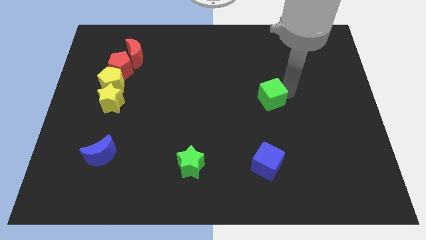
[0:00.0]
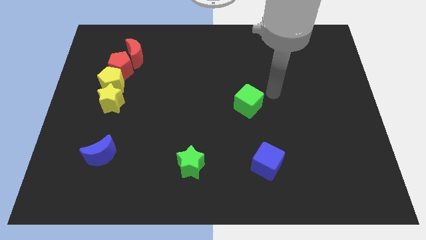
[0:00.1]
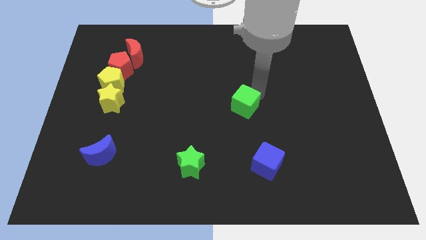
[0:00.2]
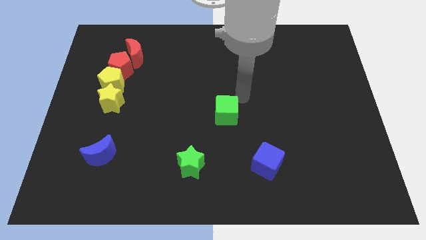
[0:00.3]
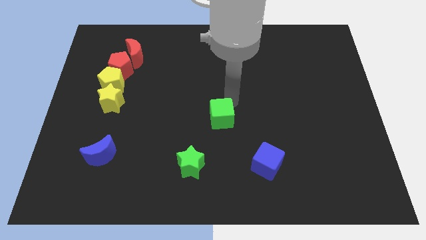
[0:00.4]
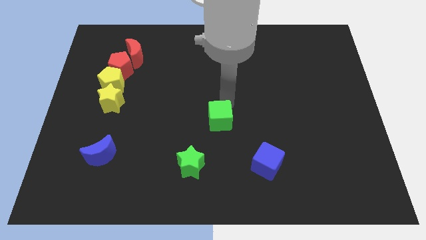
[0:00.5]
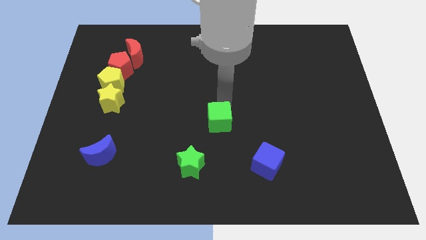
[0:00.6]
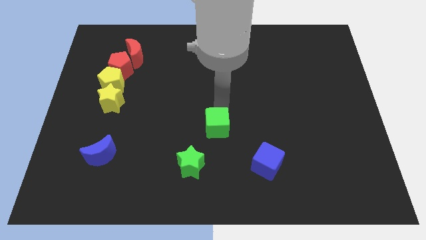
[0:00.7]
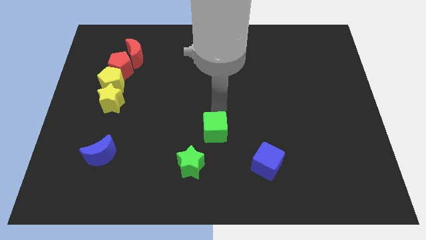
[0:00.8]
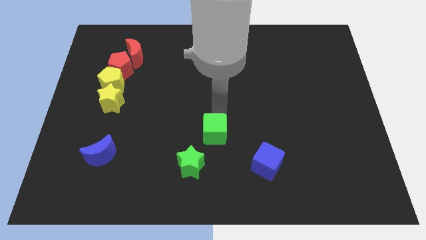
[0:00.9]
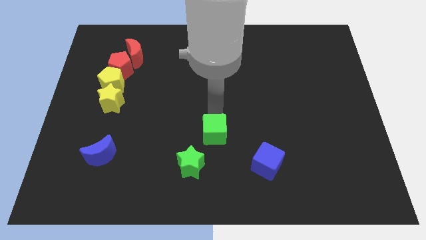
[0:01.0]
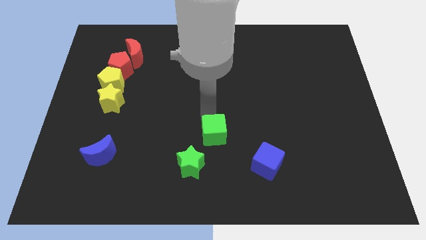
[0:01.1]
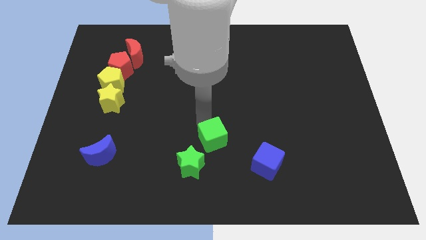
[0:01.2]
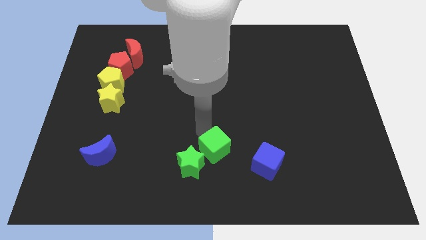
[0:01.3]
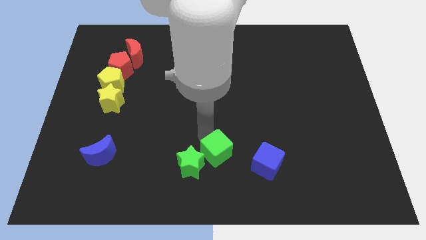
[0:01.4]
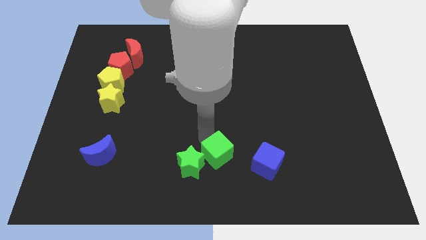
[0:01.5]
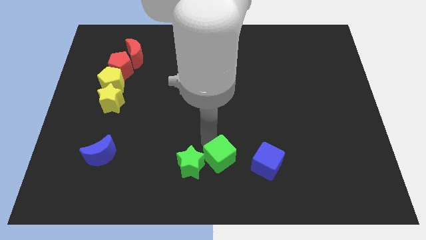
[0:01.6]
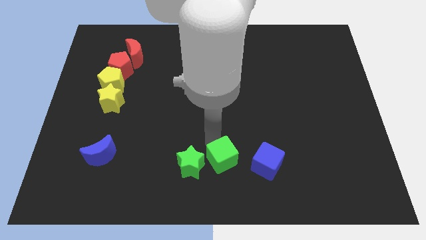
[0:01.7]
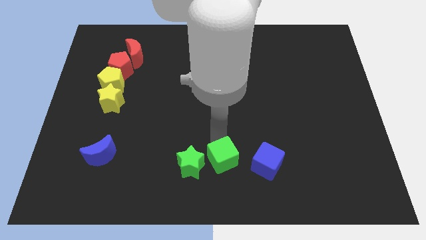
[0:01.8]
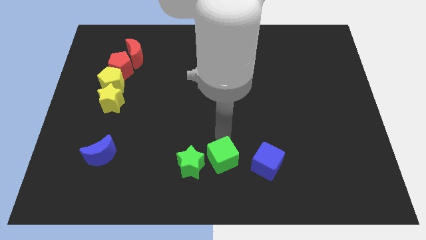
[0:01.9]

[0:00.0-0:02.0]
place the green cube close to the green star

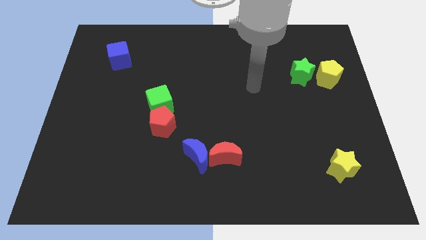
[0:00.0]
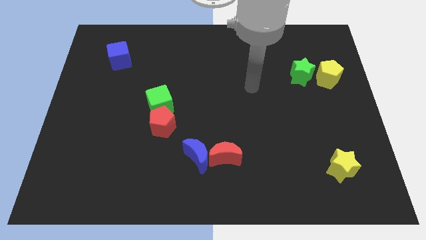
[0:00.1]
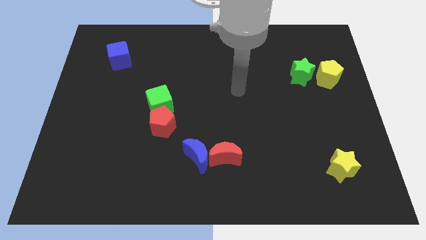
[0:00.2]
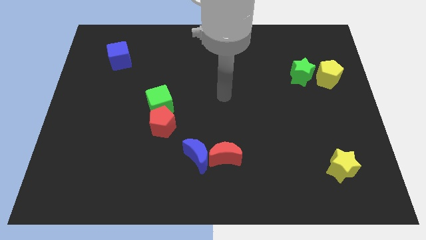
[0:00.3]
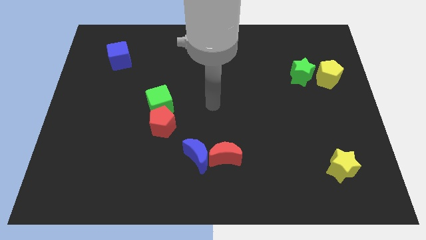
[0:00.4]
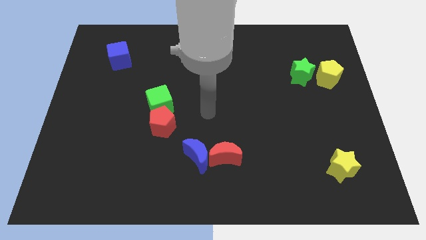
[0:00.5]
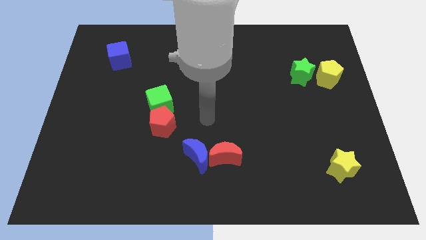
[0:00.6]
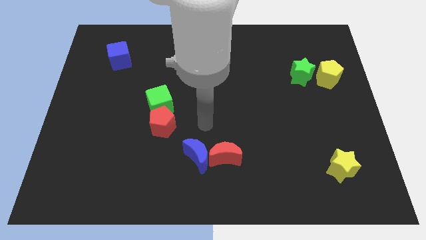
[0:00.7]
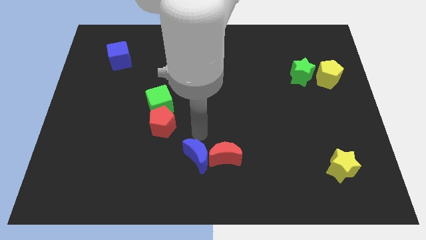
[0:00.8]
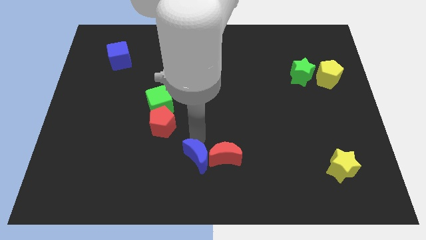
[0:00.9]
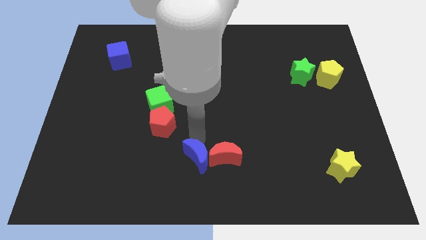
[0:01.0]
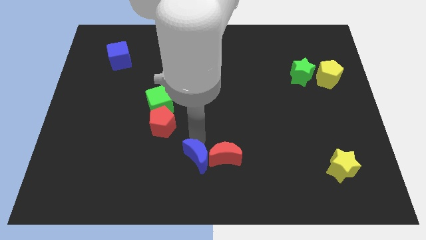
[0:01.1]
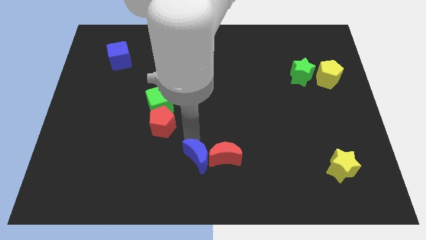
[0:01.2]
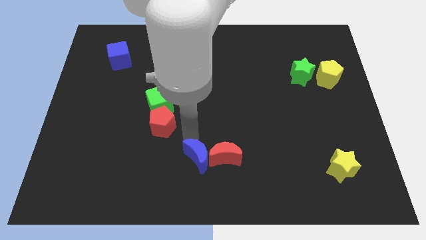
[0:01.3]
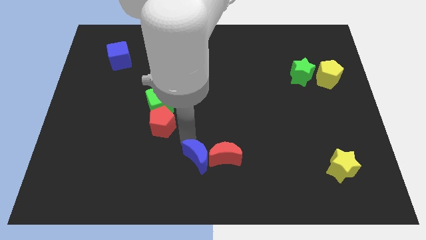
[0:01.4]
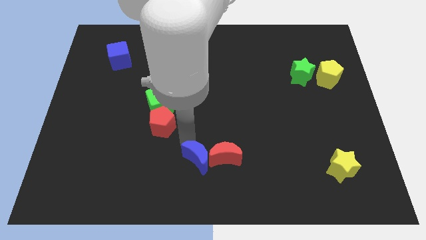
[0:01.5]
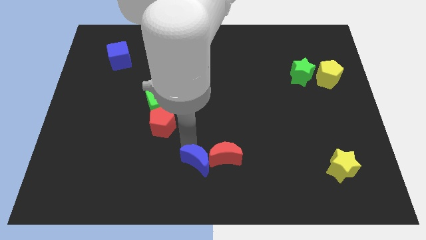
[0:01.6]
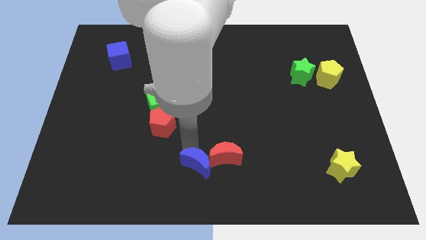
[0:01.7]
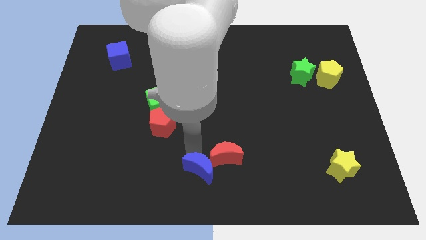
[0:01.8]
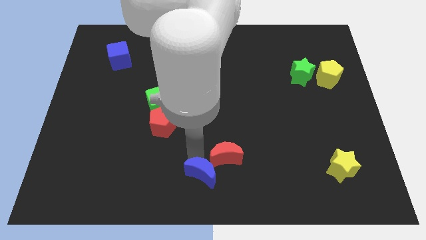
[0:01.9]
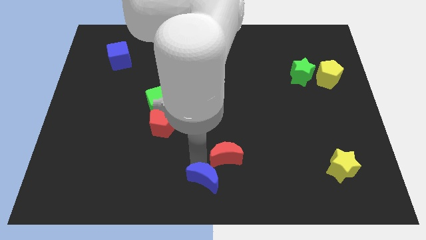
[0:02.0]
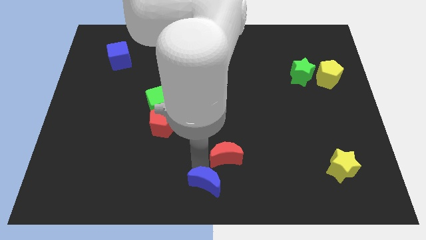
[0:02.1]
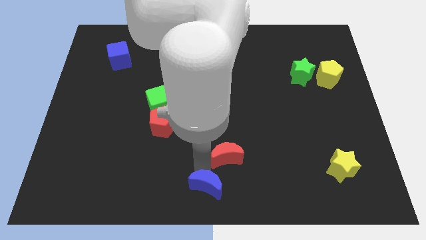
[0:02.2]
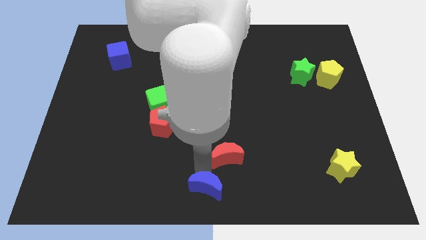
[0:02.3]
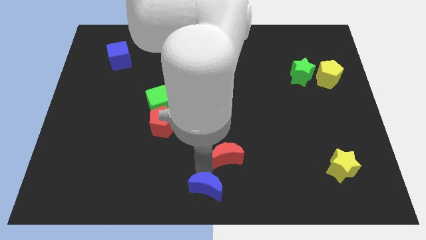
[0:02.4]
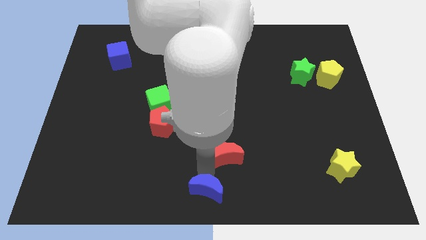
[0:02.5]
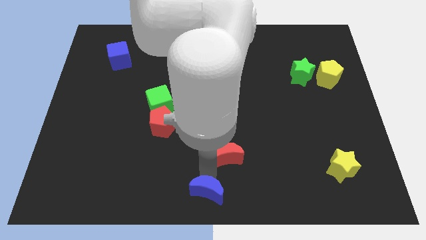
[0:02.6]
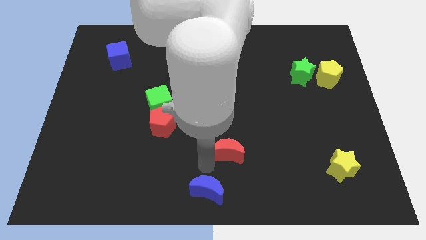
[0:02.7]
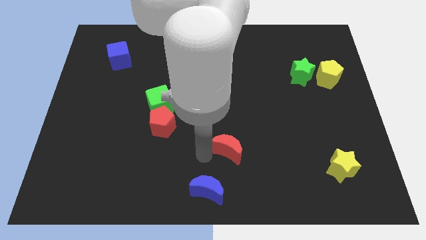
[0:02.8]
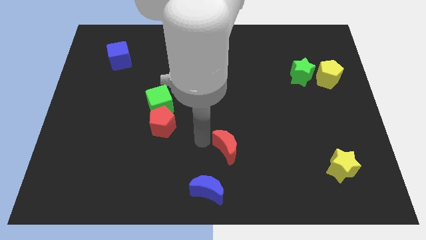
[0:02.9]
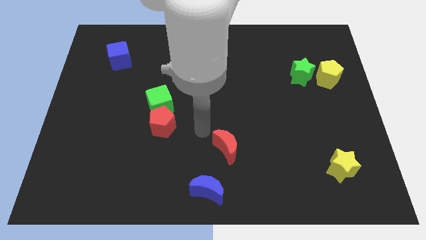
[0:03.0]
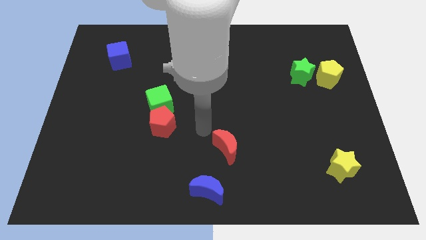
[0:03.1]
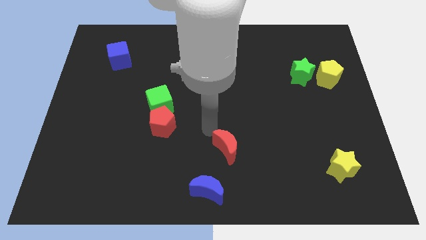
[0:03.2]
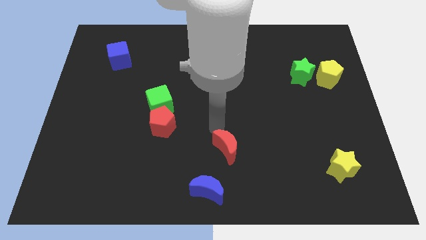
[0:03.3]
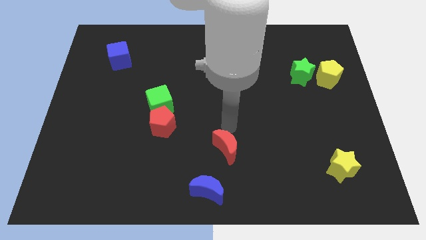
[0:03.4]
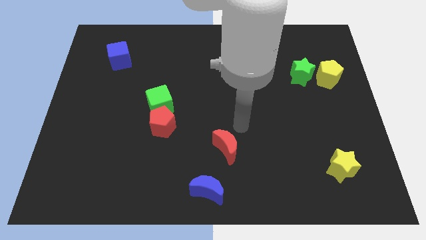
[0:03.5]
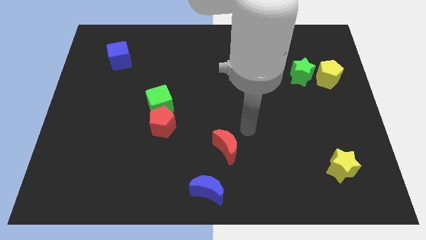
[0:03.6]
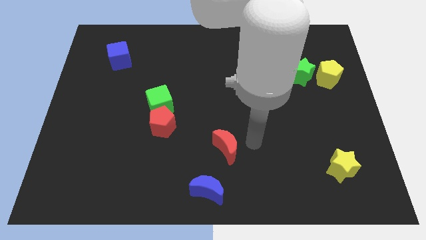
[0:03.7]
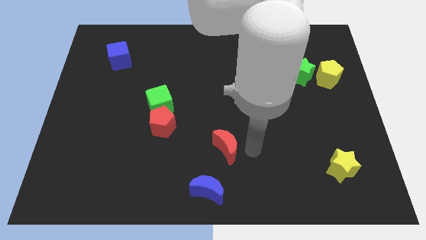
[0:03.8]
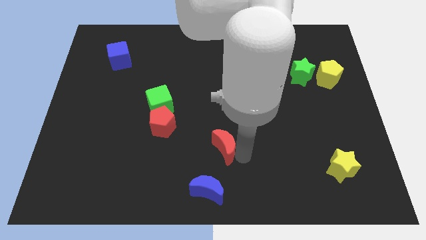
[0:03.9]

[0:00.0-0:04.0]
place the blue crescent at the bottom corner

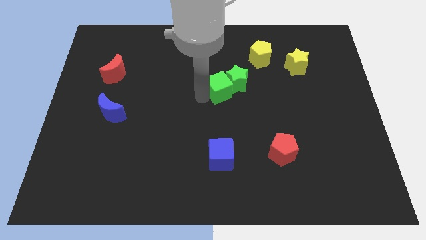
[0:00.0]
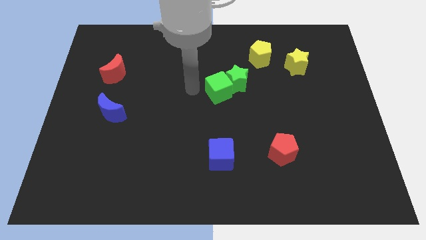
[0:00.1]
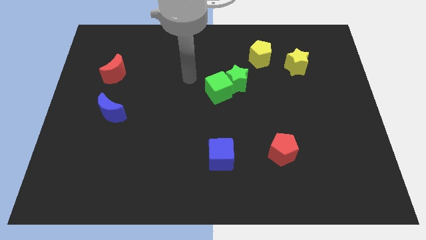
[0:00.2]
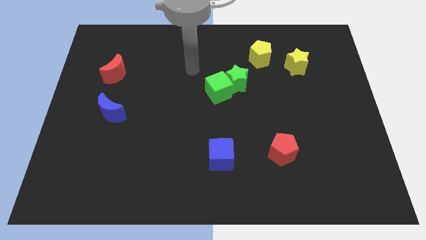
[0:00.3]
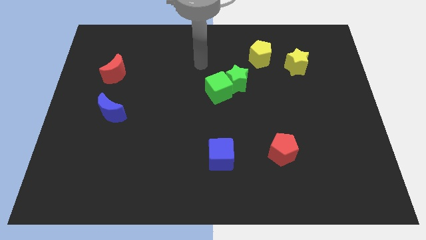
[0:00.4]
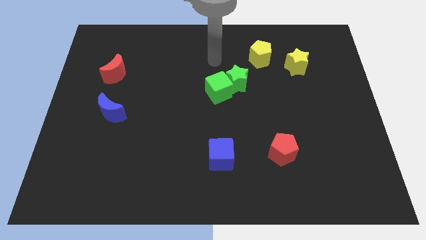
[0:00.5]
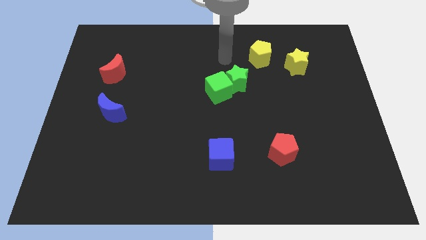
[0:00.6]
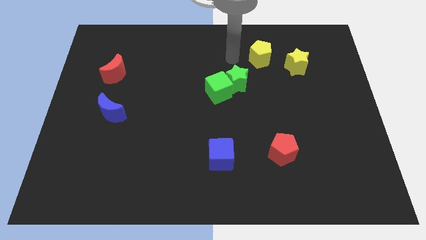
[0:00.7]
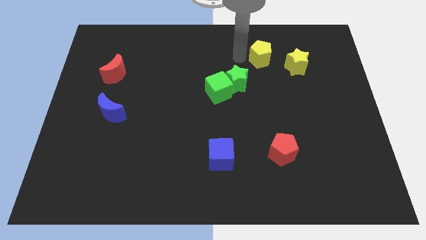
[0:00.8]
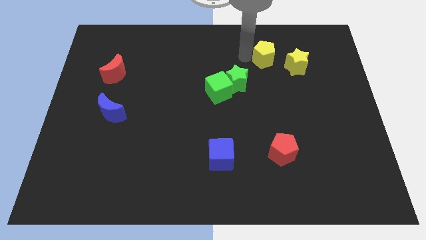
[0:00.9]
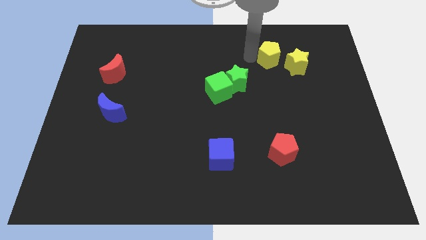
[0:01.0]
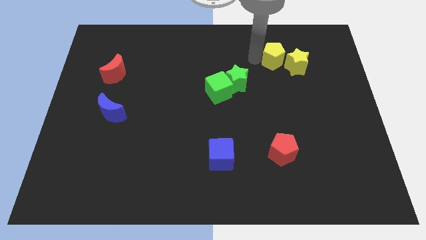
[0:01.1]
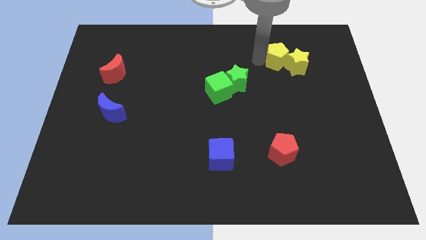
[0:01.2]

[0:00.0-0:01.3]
slightly push the yellow pentagon towards yellow star

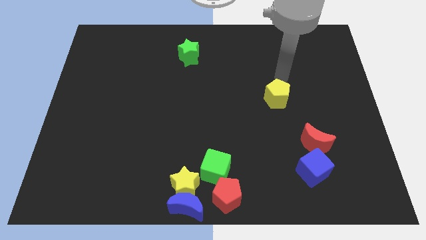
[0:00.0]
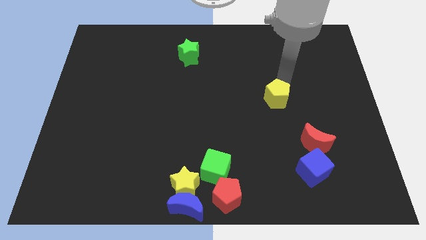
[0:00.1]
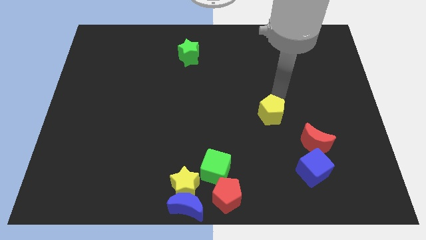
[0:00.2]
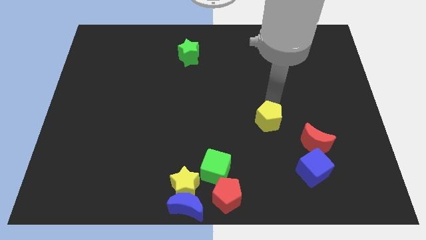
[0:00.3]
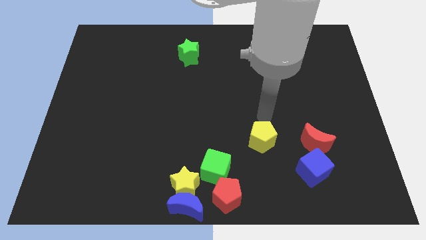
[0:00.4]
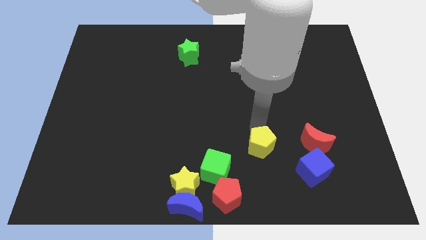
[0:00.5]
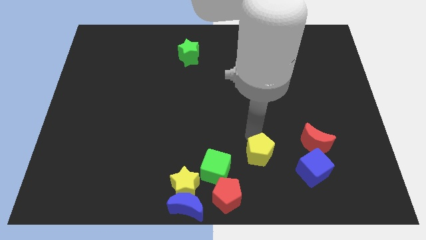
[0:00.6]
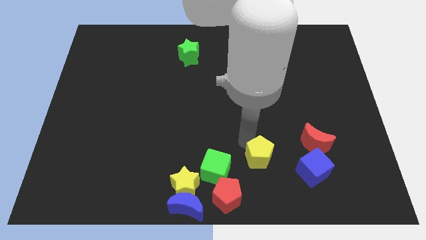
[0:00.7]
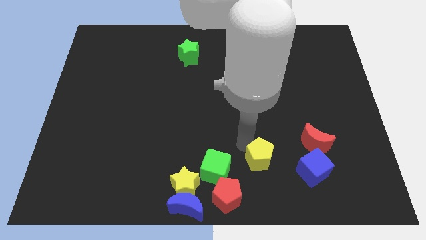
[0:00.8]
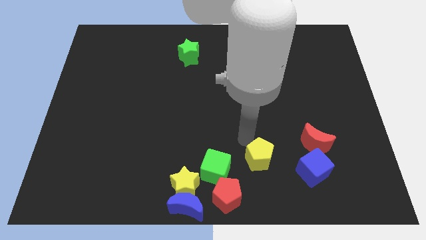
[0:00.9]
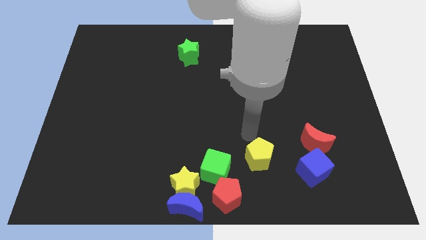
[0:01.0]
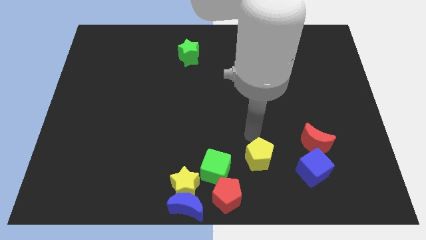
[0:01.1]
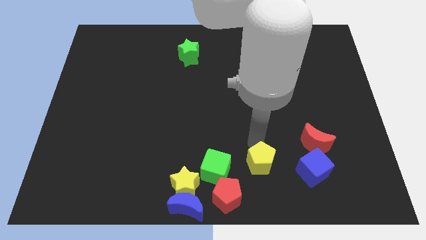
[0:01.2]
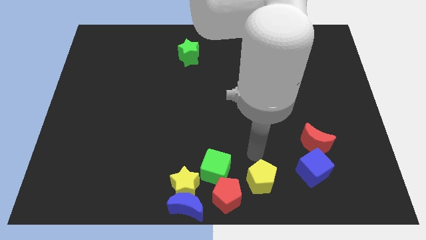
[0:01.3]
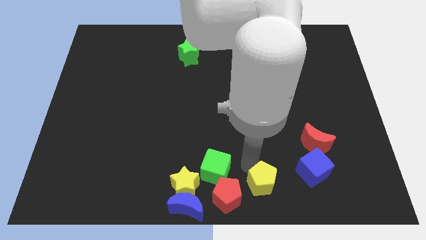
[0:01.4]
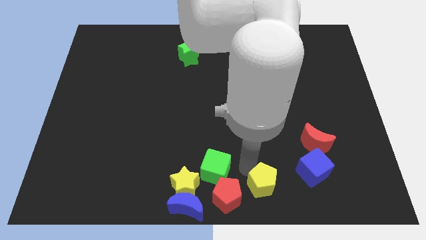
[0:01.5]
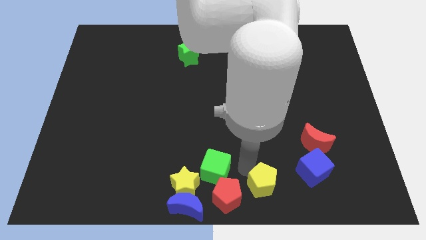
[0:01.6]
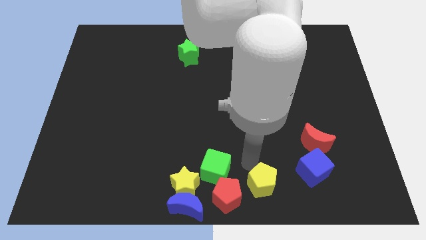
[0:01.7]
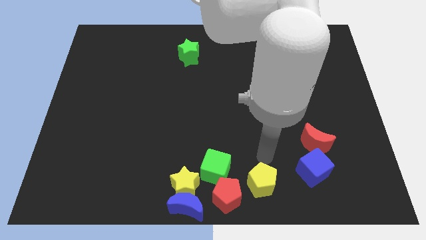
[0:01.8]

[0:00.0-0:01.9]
move the yellow pentagon towards the red pentagon
